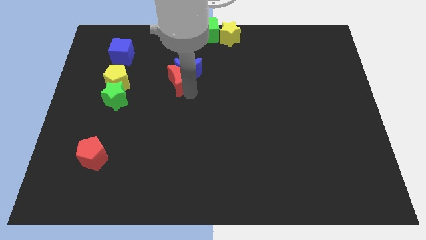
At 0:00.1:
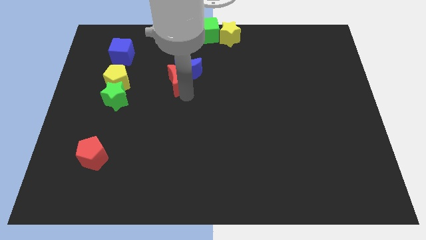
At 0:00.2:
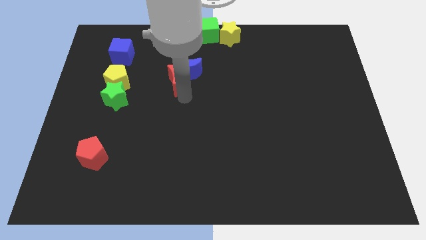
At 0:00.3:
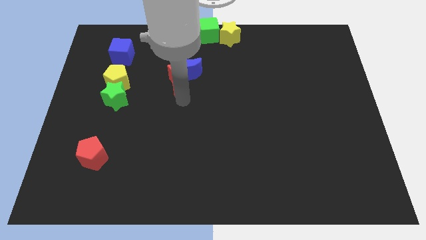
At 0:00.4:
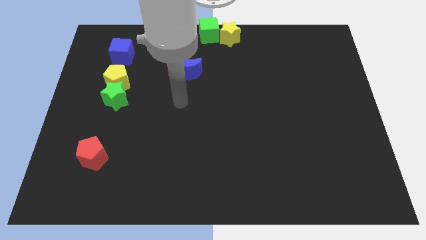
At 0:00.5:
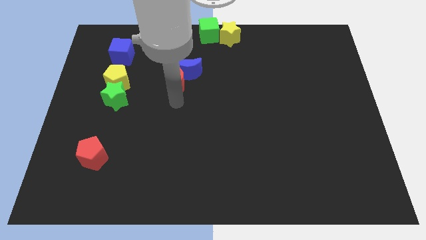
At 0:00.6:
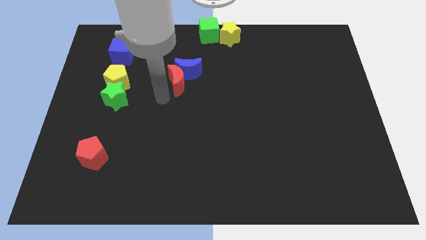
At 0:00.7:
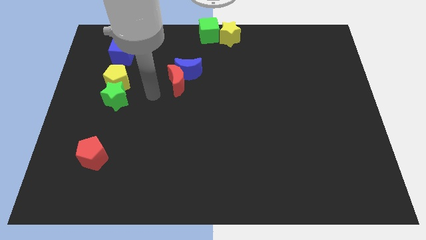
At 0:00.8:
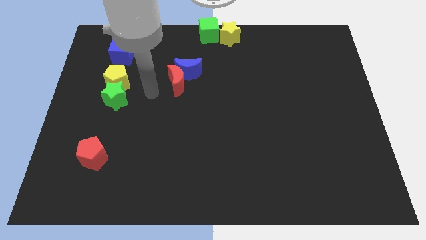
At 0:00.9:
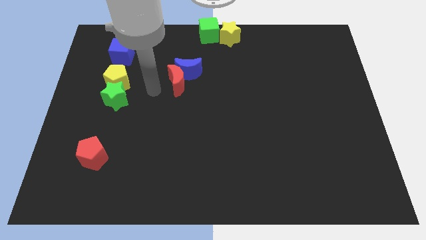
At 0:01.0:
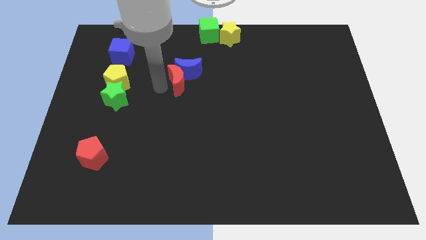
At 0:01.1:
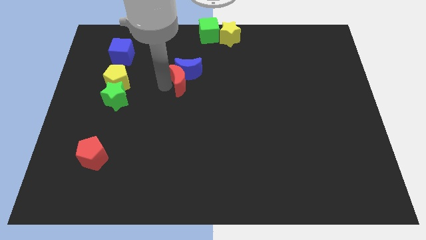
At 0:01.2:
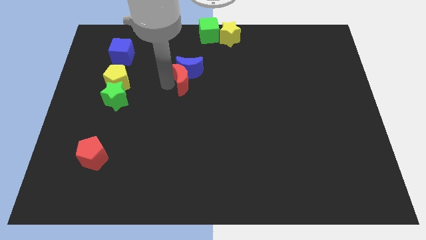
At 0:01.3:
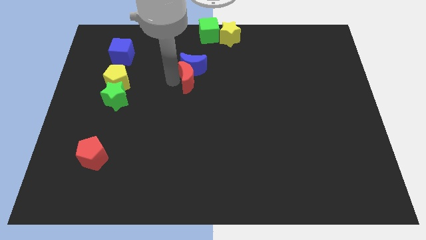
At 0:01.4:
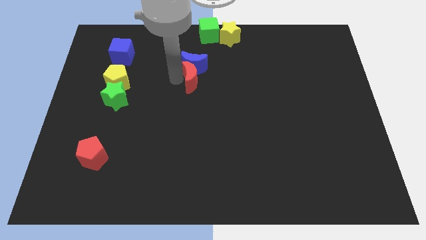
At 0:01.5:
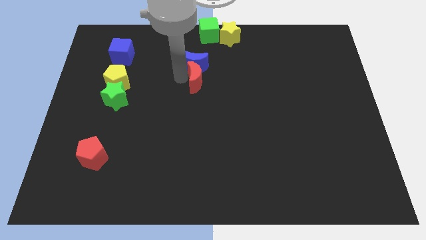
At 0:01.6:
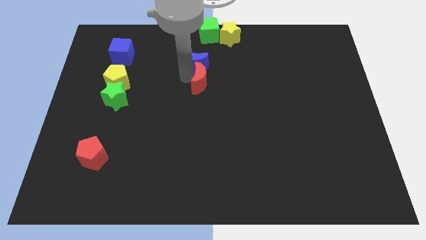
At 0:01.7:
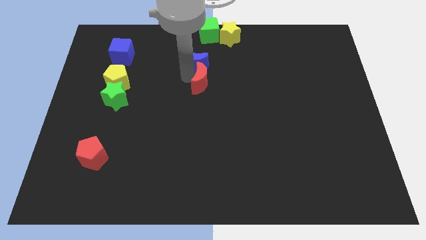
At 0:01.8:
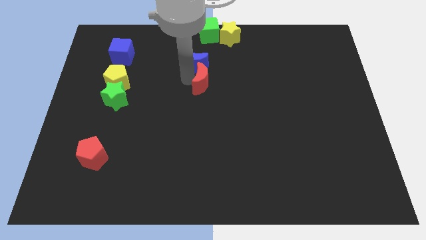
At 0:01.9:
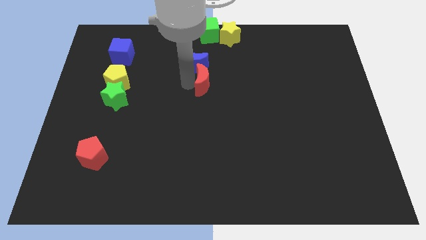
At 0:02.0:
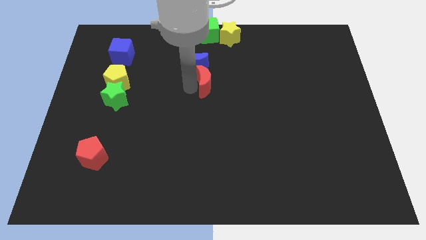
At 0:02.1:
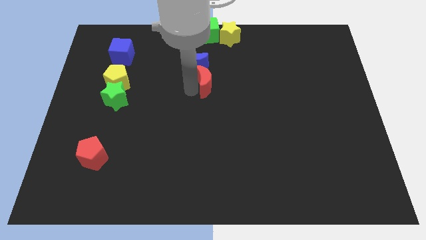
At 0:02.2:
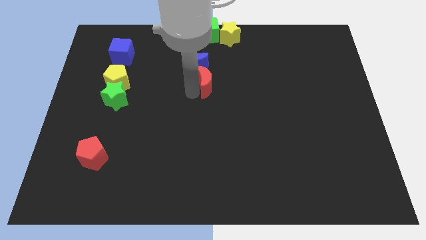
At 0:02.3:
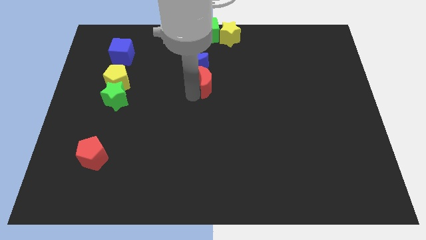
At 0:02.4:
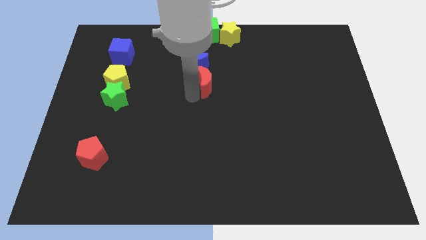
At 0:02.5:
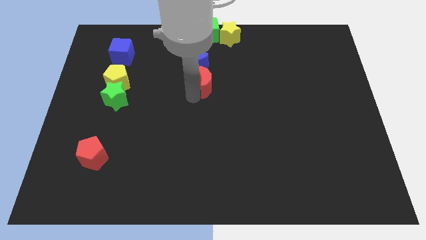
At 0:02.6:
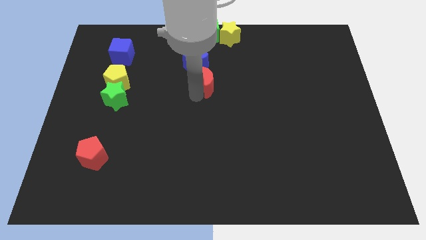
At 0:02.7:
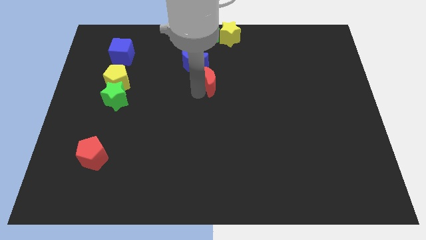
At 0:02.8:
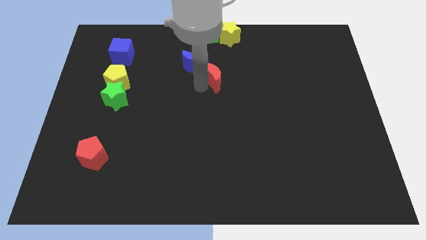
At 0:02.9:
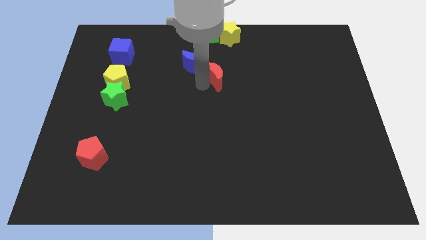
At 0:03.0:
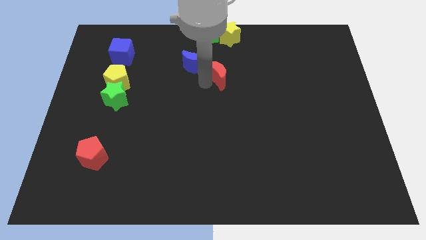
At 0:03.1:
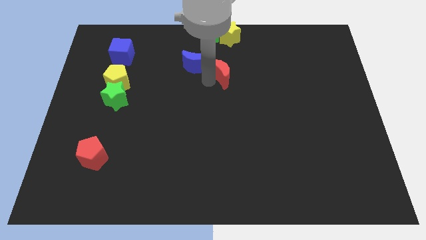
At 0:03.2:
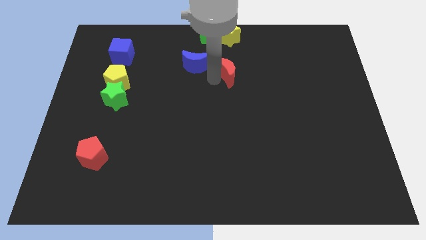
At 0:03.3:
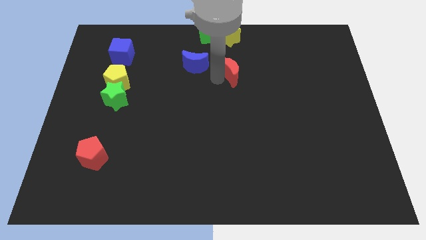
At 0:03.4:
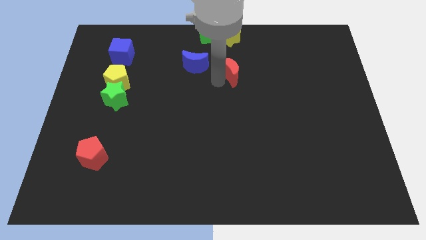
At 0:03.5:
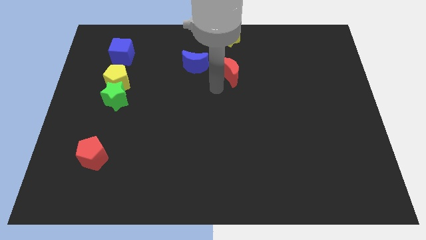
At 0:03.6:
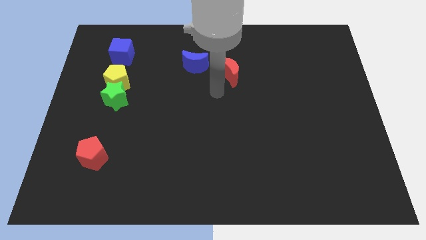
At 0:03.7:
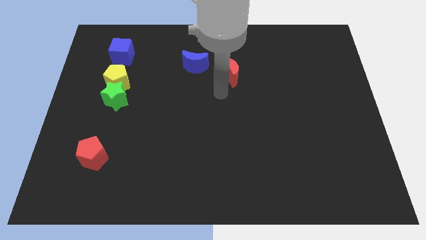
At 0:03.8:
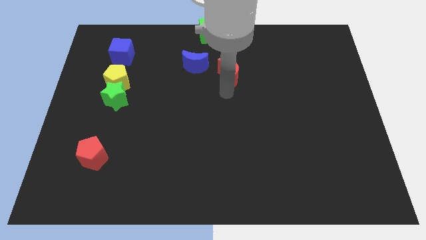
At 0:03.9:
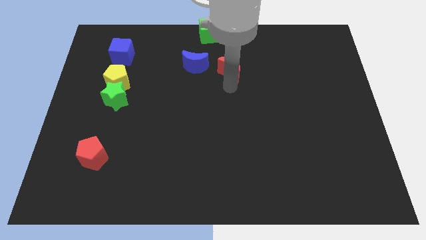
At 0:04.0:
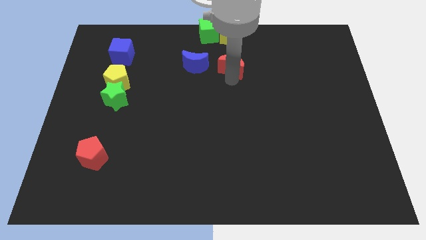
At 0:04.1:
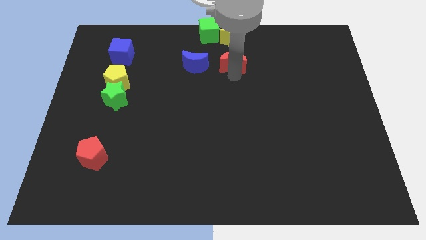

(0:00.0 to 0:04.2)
separate blue moon and red moon

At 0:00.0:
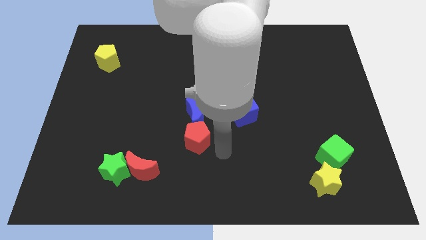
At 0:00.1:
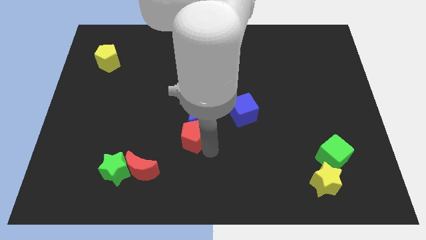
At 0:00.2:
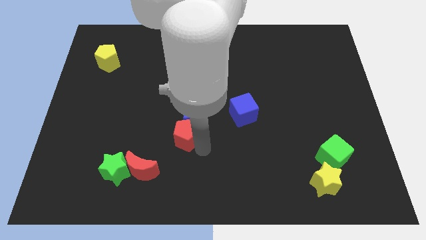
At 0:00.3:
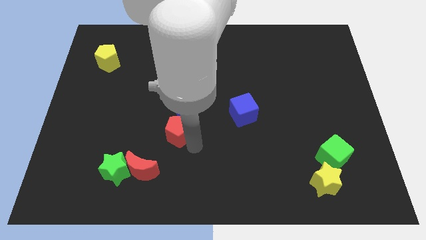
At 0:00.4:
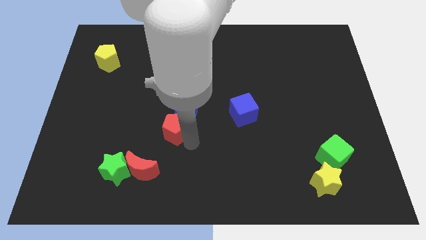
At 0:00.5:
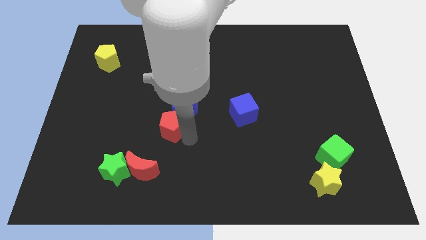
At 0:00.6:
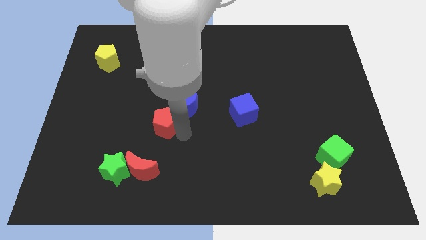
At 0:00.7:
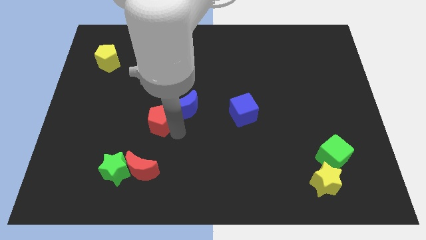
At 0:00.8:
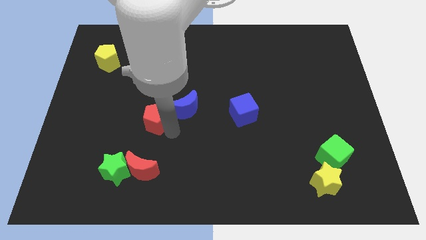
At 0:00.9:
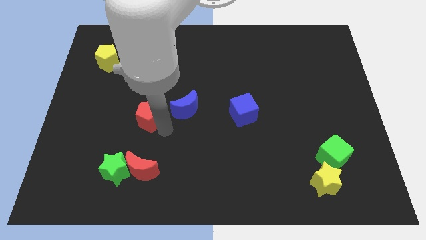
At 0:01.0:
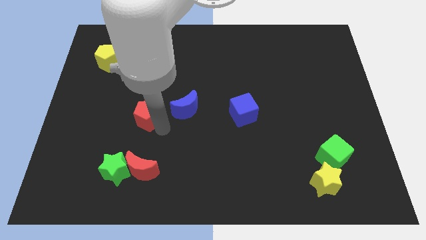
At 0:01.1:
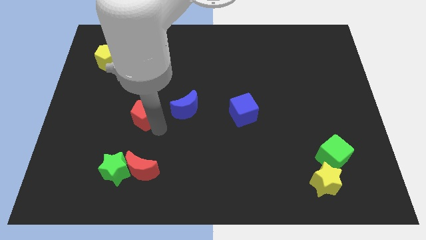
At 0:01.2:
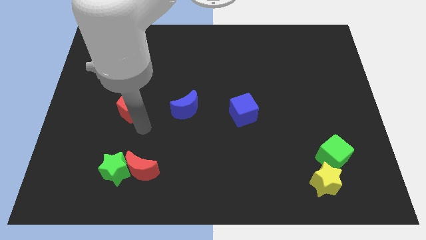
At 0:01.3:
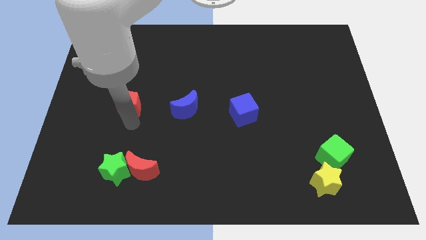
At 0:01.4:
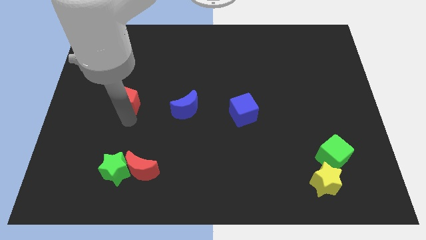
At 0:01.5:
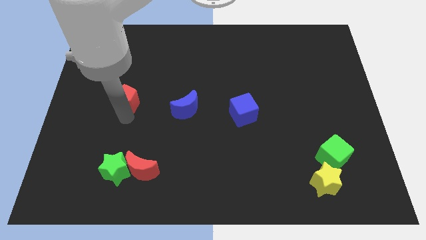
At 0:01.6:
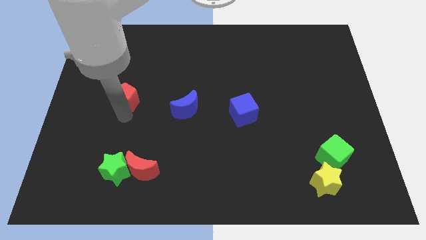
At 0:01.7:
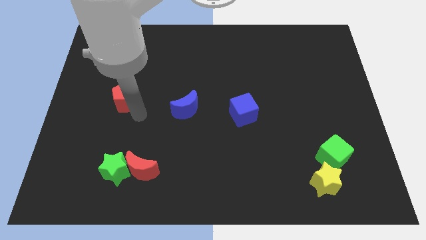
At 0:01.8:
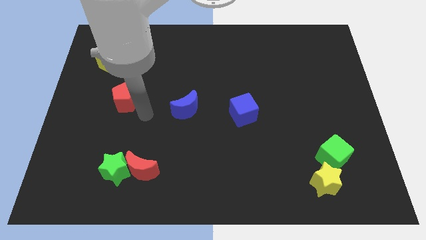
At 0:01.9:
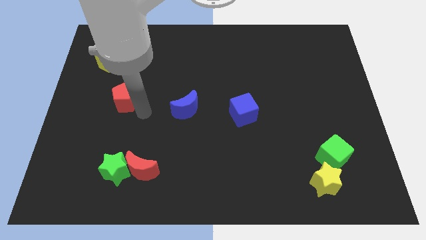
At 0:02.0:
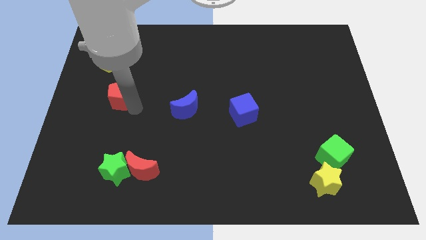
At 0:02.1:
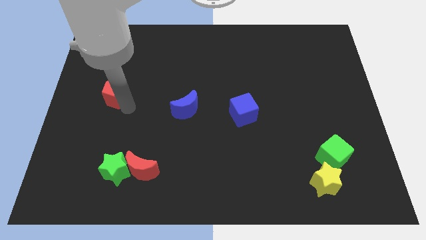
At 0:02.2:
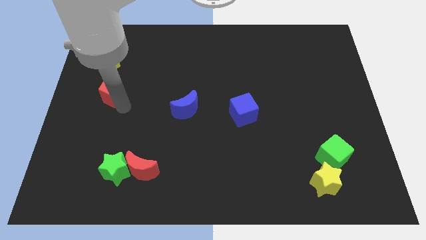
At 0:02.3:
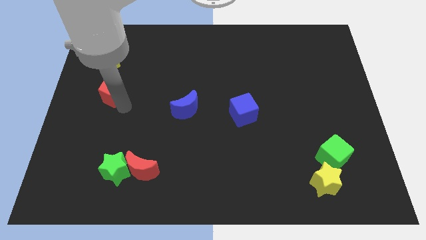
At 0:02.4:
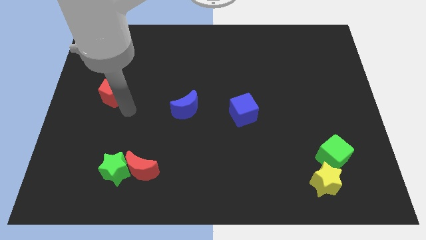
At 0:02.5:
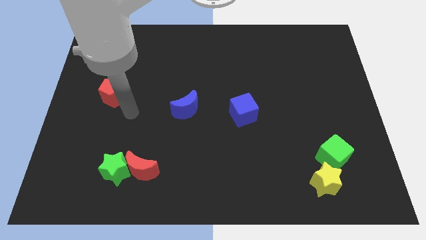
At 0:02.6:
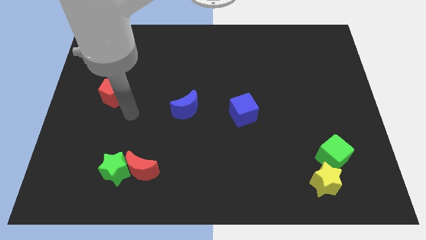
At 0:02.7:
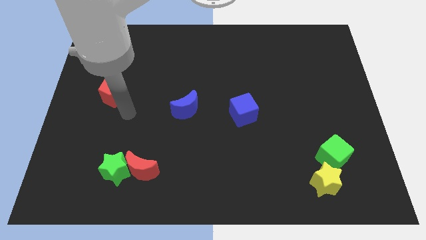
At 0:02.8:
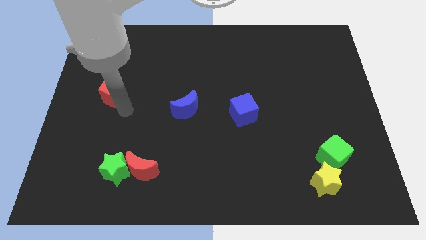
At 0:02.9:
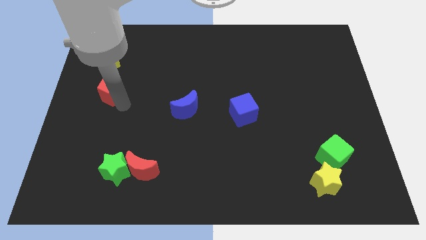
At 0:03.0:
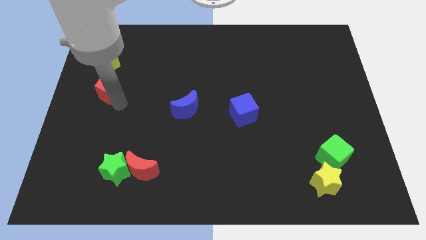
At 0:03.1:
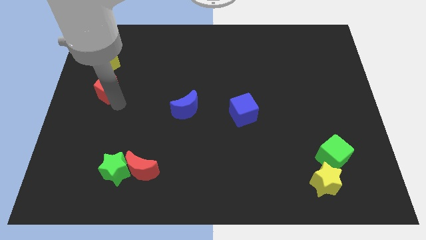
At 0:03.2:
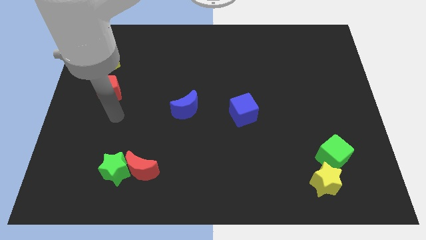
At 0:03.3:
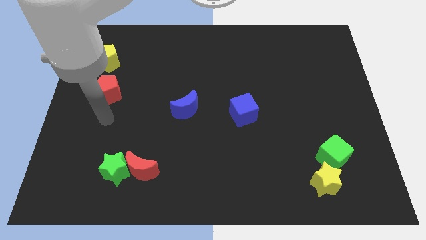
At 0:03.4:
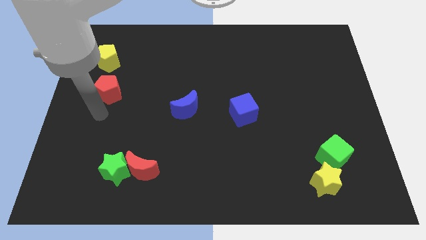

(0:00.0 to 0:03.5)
put the red pentaon below the yellow pentagon

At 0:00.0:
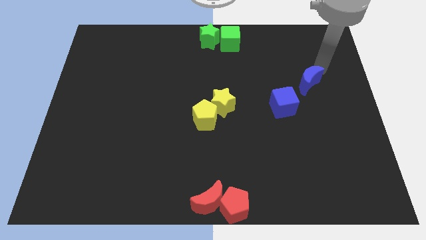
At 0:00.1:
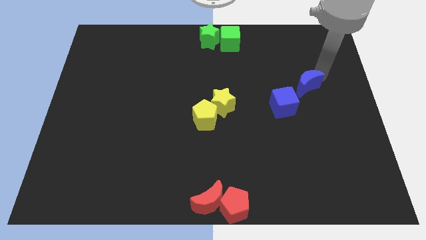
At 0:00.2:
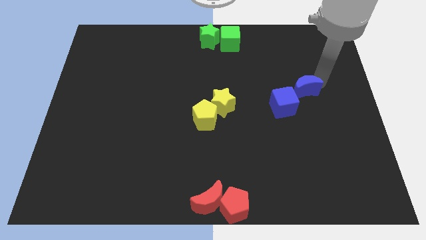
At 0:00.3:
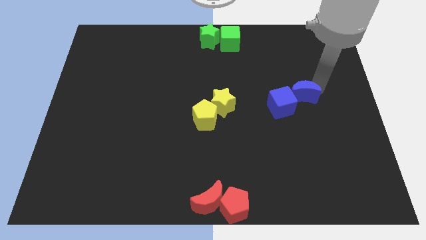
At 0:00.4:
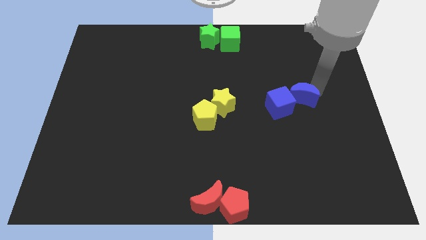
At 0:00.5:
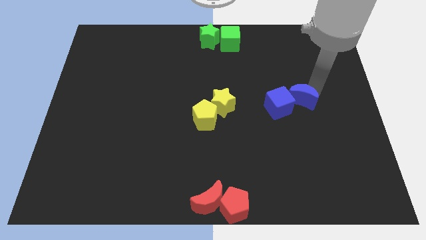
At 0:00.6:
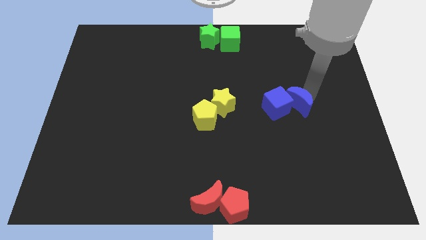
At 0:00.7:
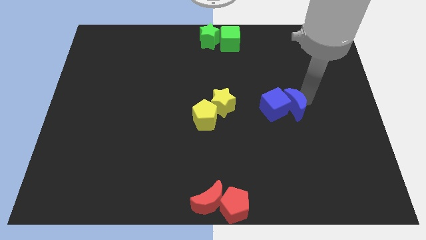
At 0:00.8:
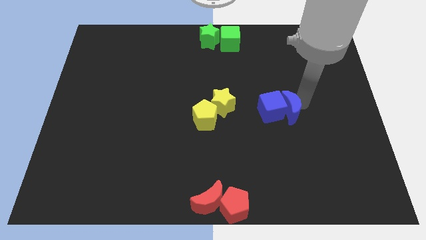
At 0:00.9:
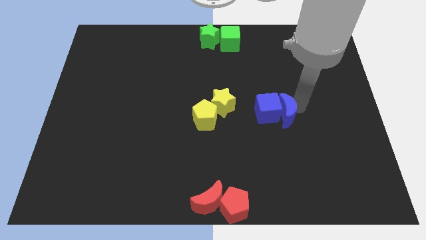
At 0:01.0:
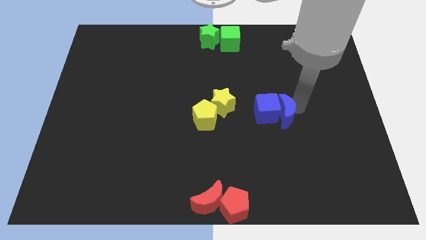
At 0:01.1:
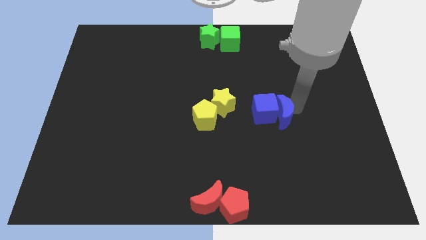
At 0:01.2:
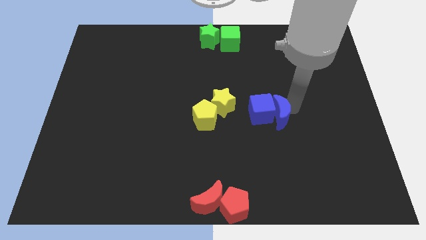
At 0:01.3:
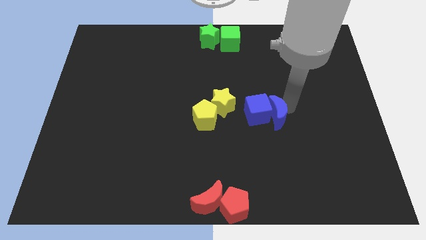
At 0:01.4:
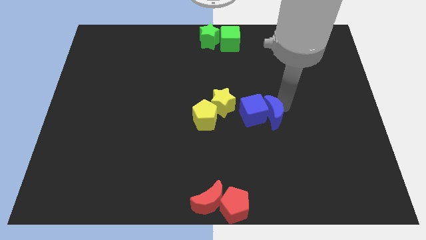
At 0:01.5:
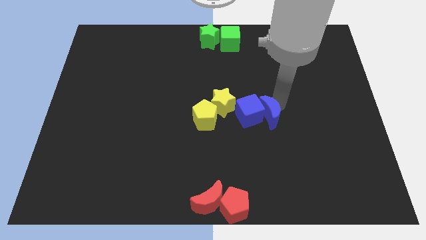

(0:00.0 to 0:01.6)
push the blue moon into the blue cube
